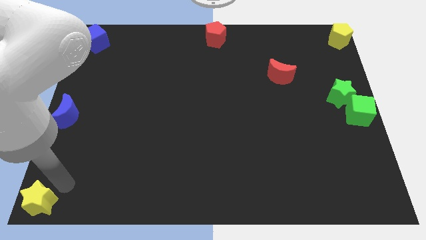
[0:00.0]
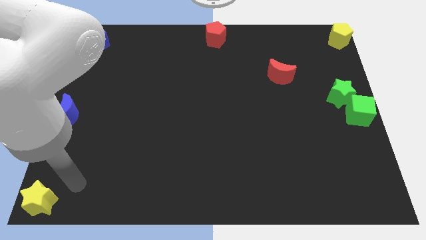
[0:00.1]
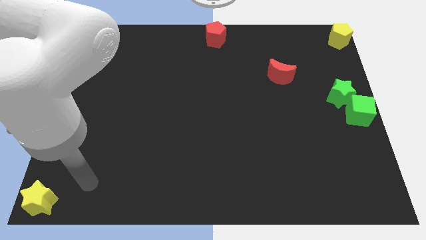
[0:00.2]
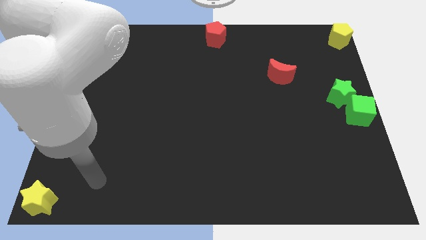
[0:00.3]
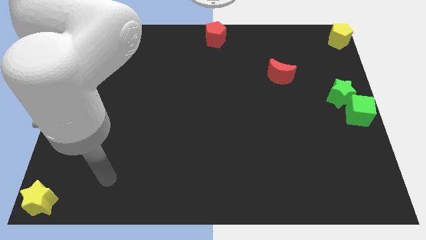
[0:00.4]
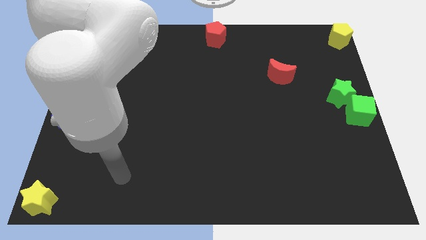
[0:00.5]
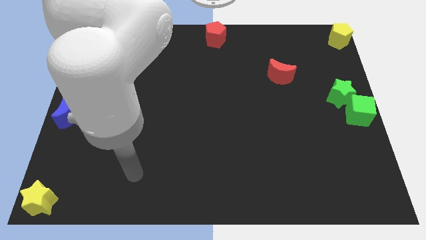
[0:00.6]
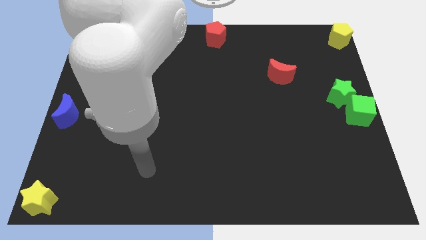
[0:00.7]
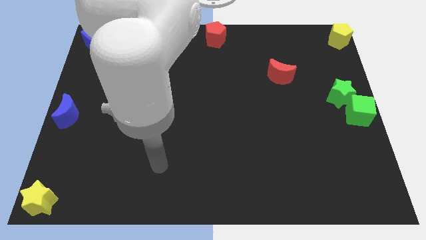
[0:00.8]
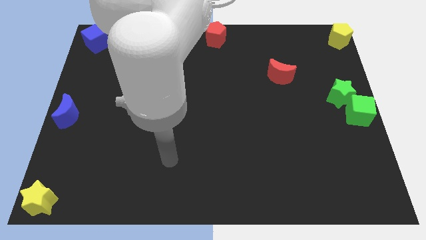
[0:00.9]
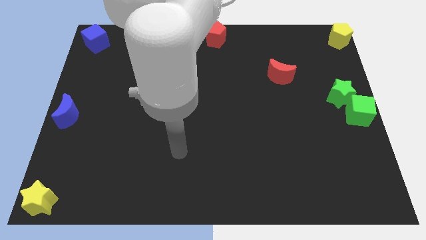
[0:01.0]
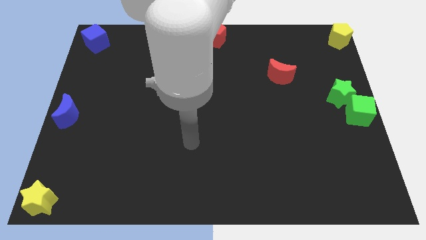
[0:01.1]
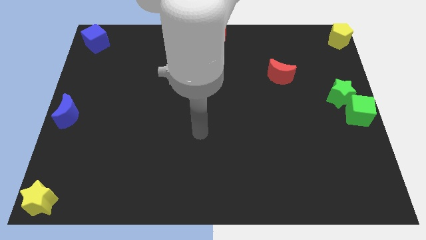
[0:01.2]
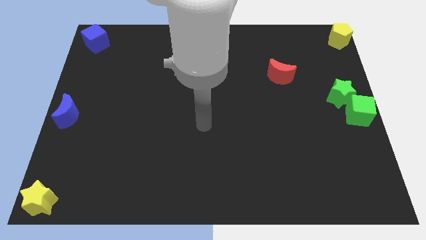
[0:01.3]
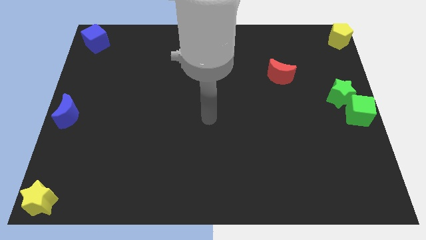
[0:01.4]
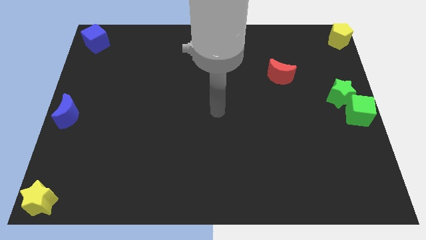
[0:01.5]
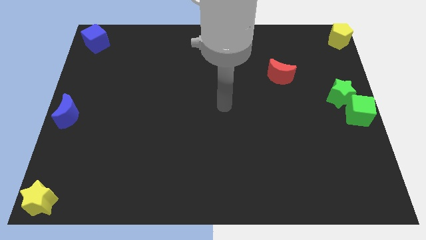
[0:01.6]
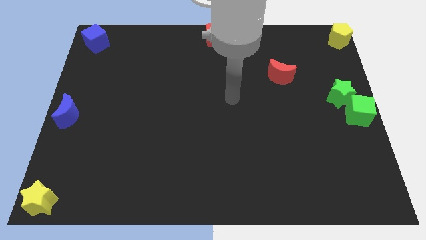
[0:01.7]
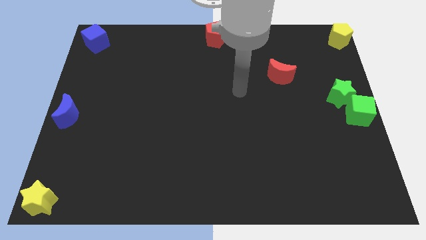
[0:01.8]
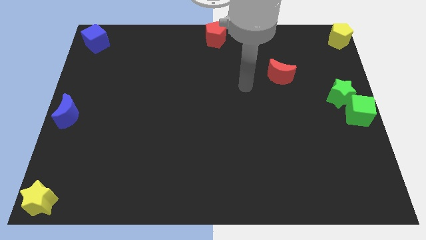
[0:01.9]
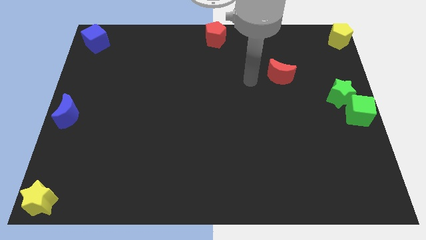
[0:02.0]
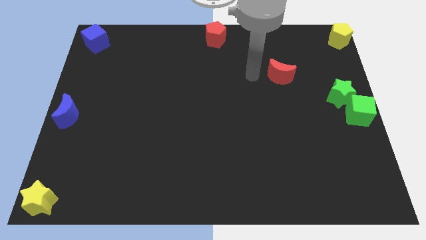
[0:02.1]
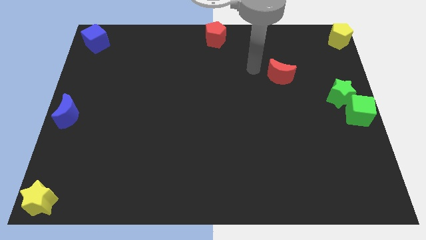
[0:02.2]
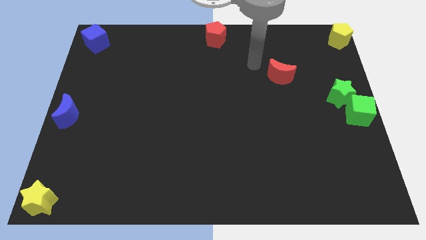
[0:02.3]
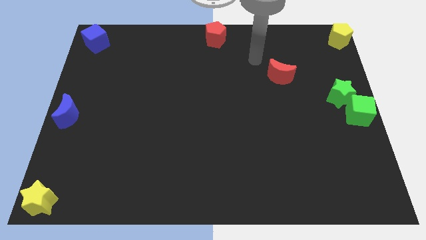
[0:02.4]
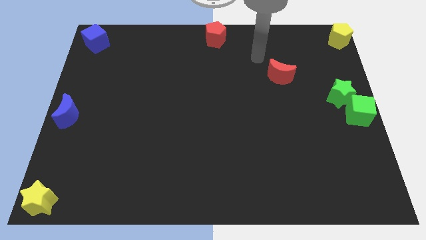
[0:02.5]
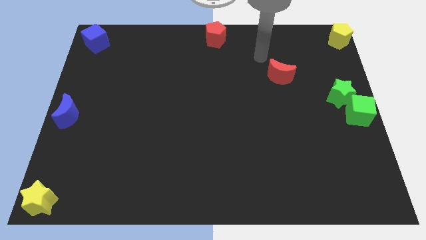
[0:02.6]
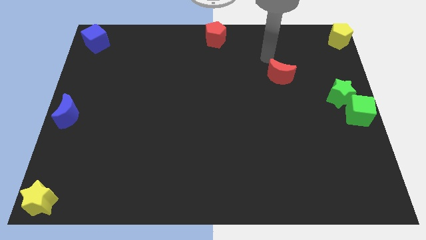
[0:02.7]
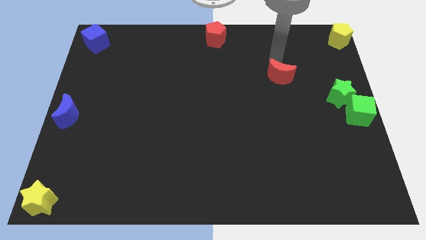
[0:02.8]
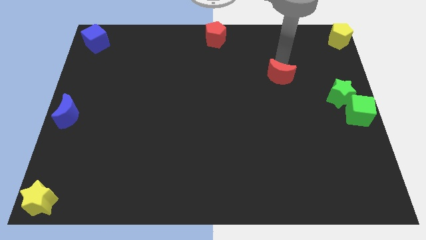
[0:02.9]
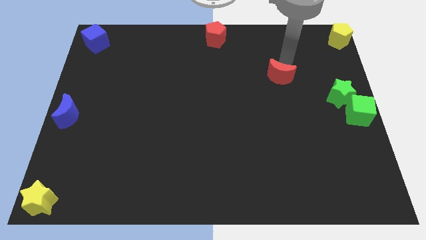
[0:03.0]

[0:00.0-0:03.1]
move the arm towards the red moon

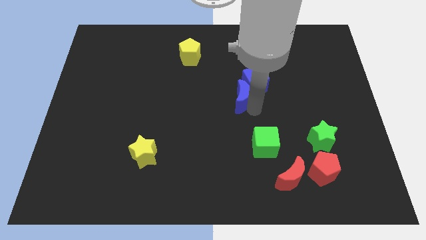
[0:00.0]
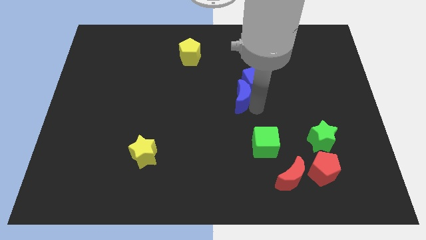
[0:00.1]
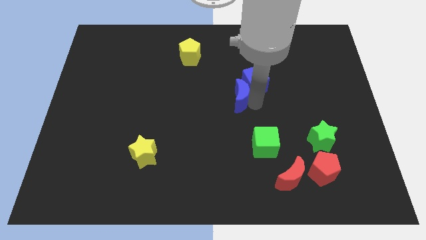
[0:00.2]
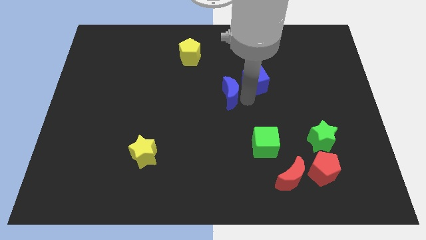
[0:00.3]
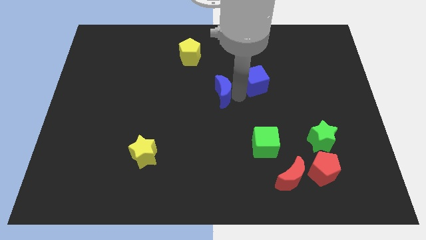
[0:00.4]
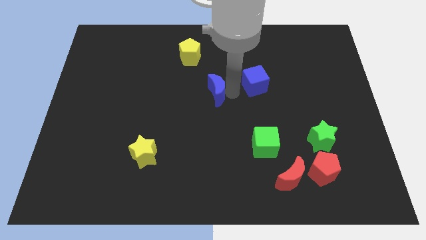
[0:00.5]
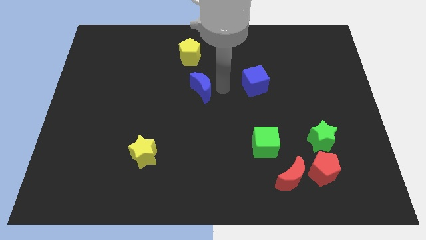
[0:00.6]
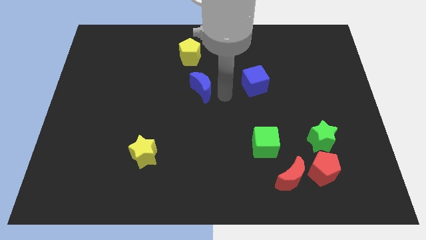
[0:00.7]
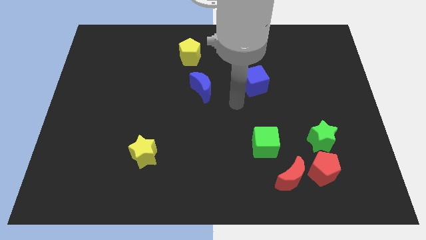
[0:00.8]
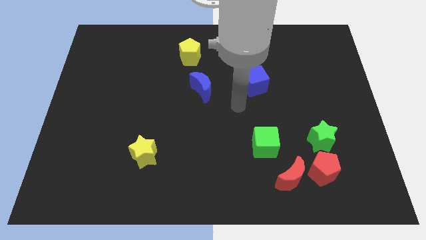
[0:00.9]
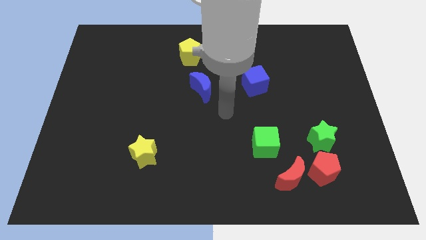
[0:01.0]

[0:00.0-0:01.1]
place the blue crescent to the left of the blue cube

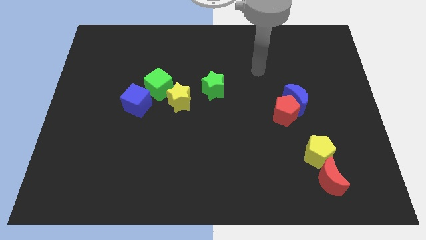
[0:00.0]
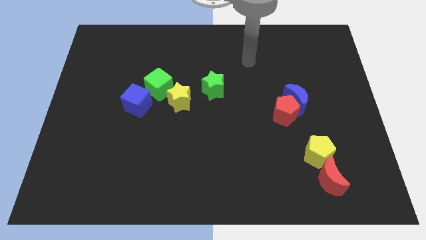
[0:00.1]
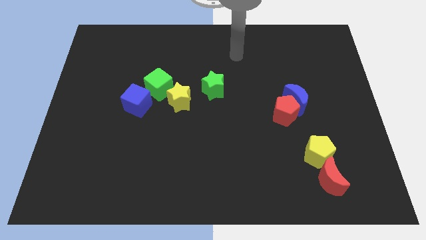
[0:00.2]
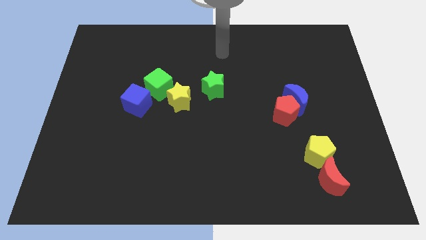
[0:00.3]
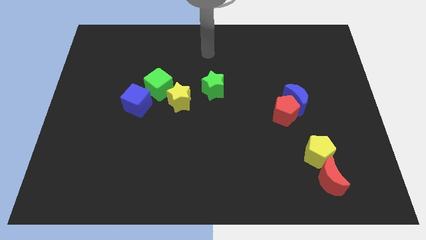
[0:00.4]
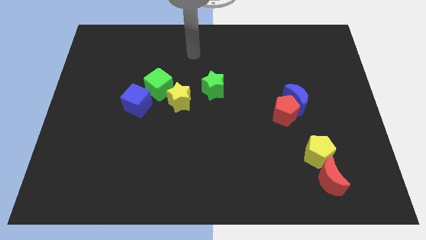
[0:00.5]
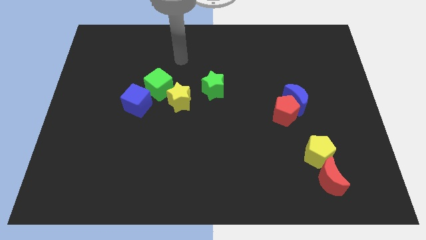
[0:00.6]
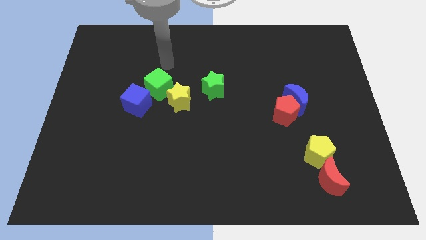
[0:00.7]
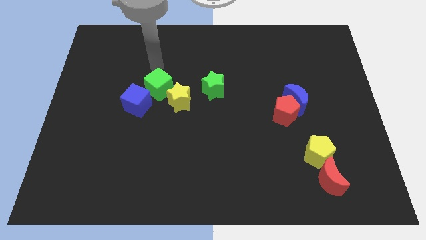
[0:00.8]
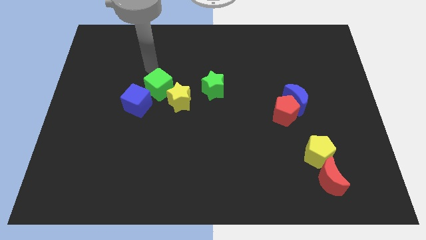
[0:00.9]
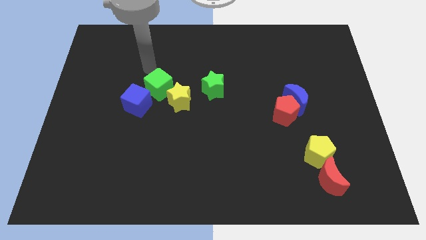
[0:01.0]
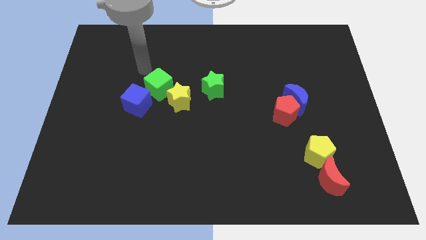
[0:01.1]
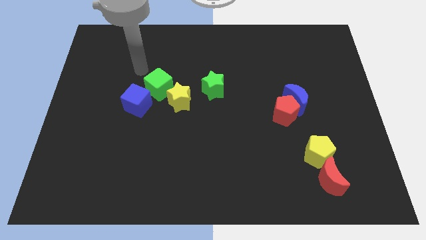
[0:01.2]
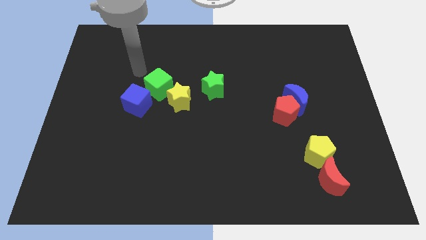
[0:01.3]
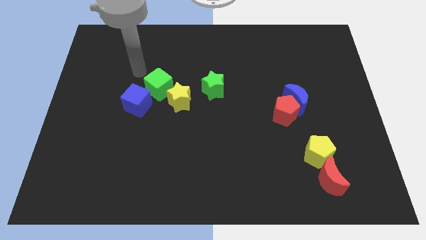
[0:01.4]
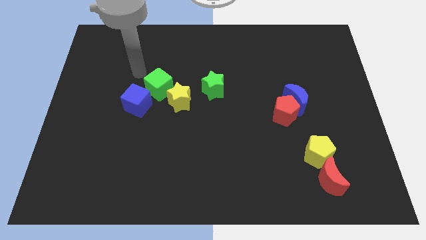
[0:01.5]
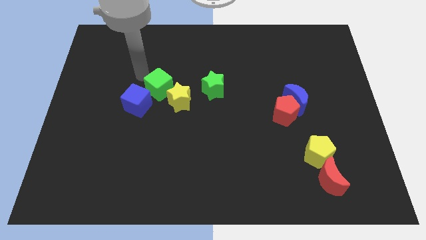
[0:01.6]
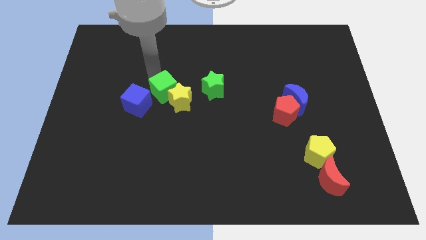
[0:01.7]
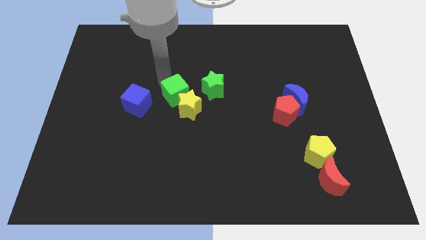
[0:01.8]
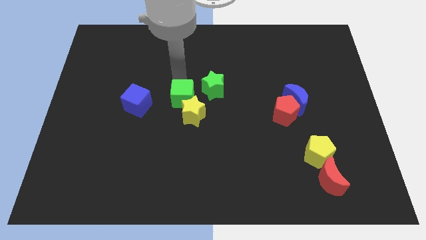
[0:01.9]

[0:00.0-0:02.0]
push the green cube into the yellow star

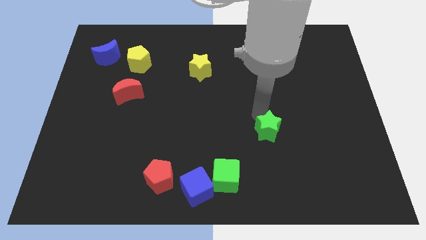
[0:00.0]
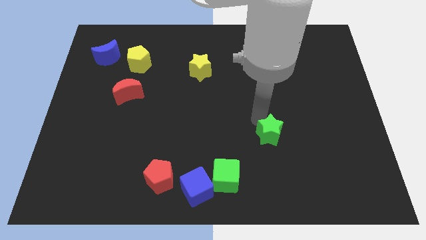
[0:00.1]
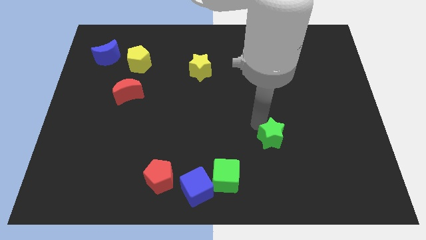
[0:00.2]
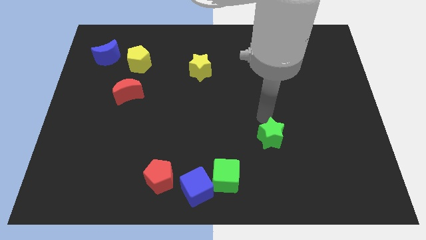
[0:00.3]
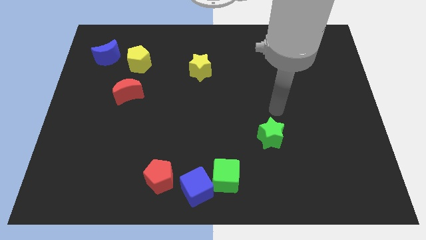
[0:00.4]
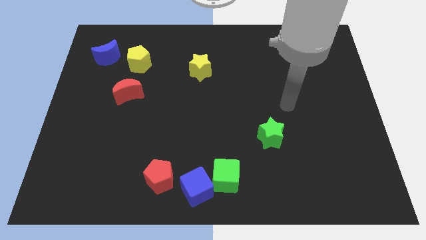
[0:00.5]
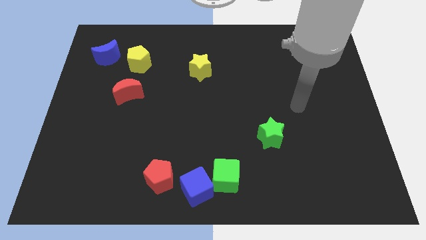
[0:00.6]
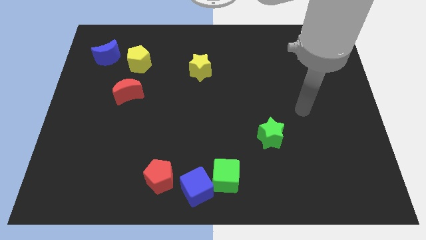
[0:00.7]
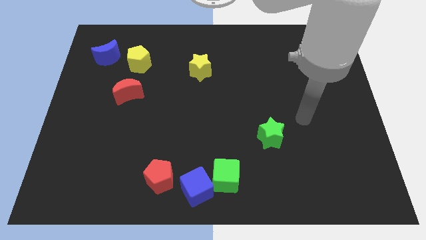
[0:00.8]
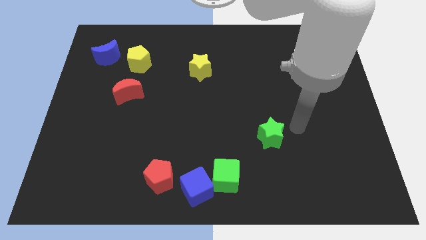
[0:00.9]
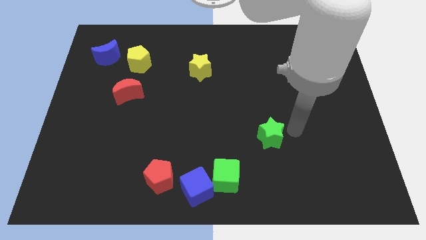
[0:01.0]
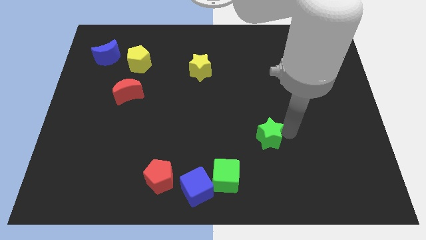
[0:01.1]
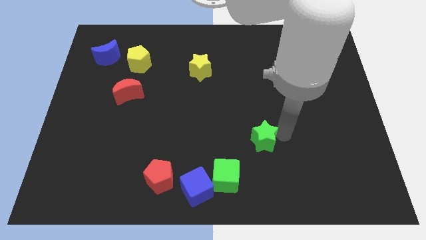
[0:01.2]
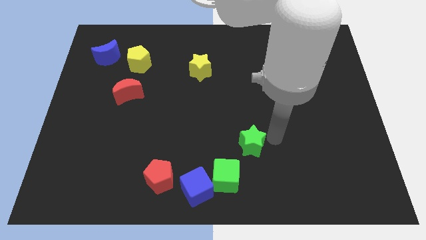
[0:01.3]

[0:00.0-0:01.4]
place the green star diagonally top right to the green cube

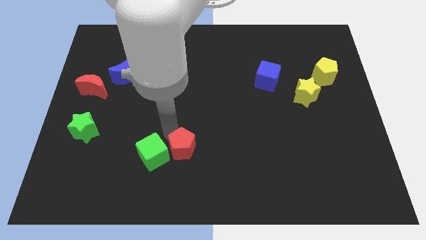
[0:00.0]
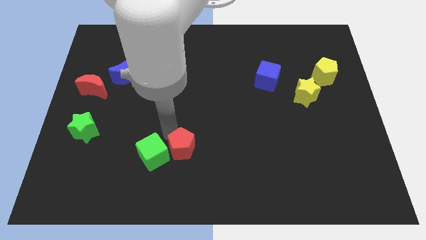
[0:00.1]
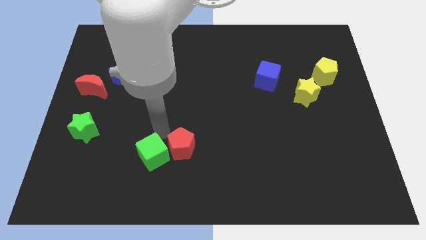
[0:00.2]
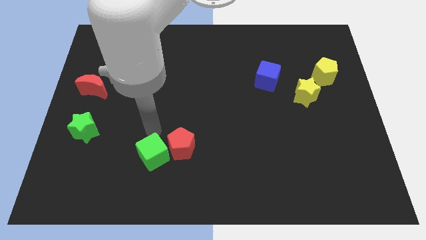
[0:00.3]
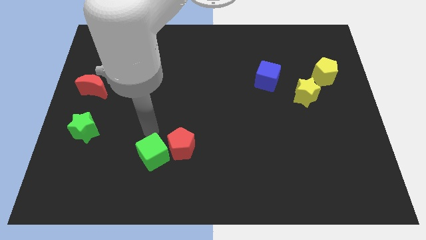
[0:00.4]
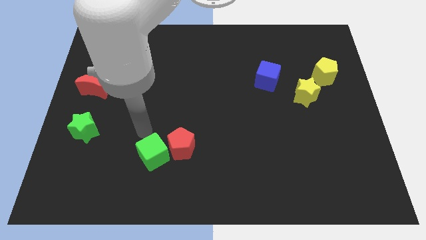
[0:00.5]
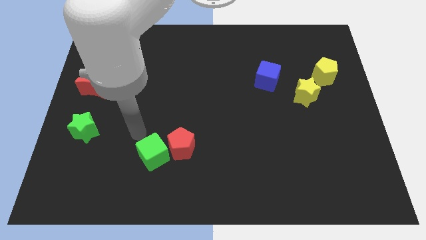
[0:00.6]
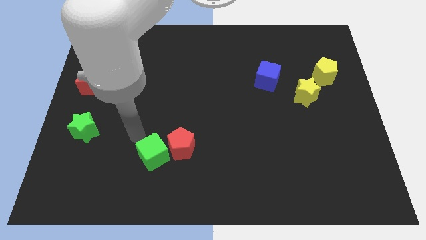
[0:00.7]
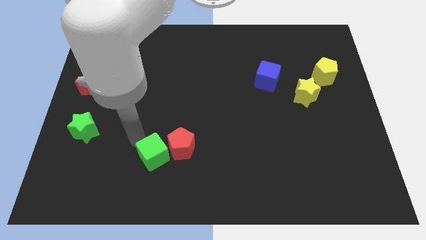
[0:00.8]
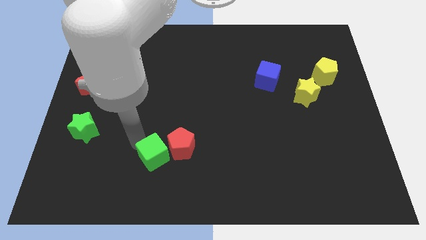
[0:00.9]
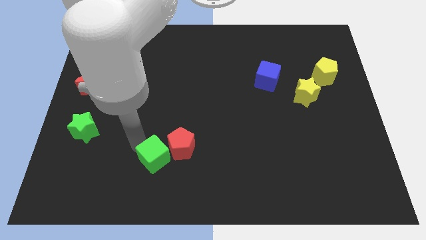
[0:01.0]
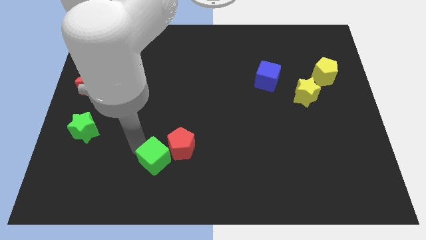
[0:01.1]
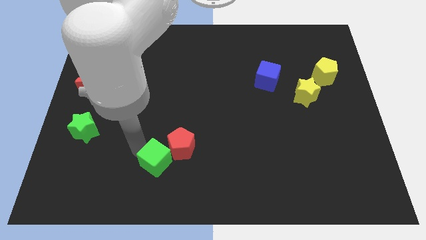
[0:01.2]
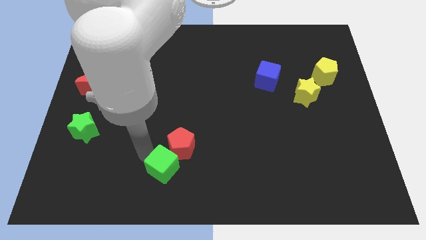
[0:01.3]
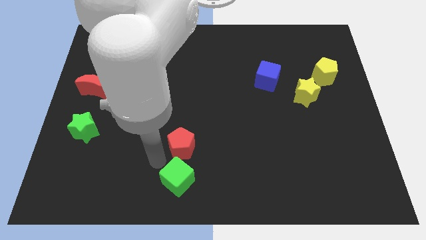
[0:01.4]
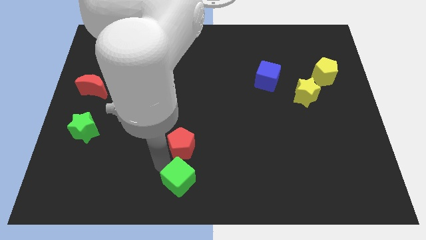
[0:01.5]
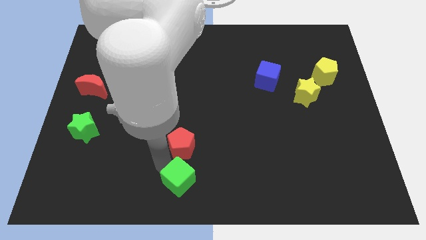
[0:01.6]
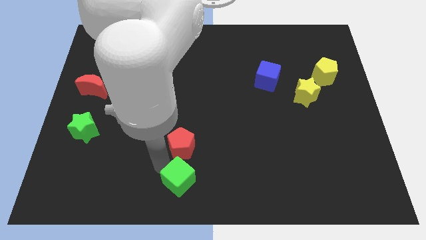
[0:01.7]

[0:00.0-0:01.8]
slide the green cube to the bottom side of the red pentagon
